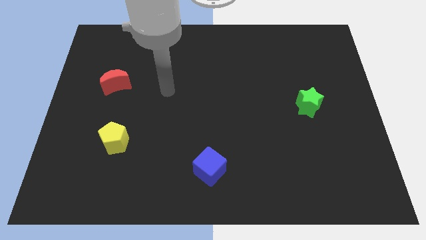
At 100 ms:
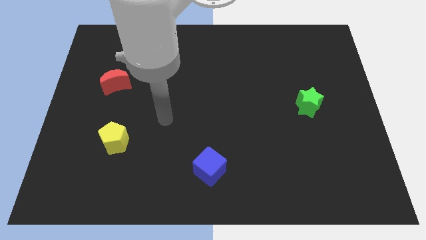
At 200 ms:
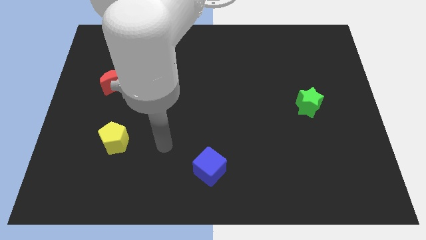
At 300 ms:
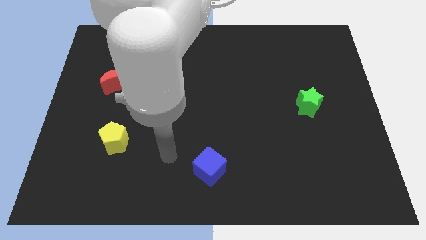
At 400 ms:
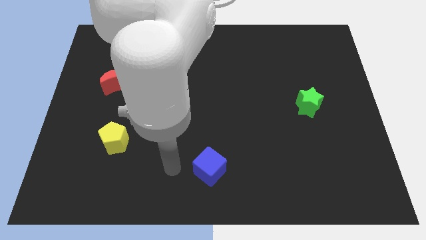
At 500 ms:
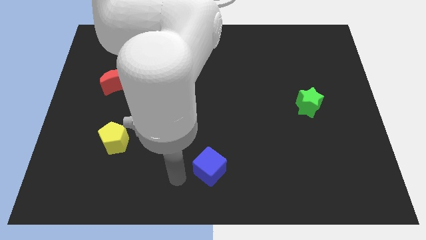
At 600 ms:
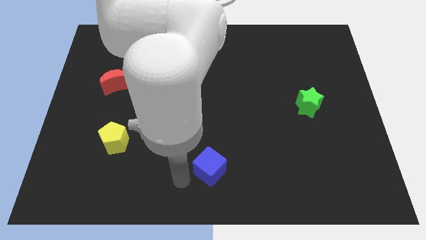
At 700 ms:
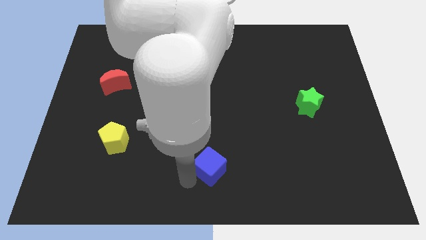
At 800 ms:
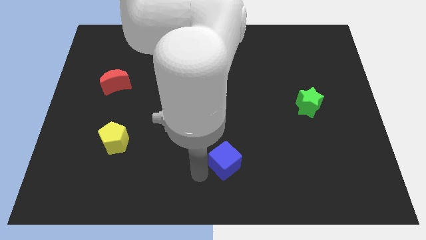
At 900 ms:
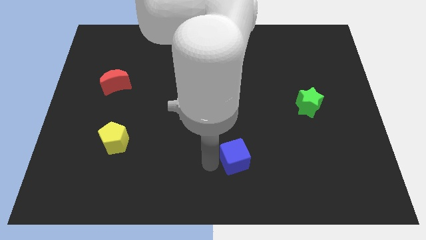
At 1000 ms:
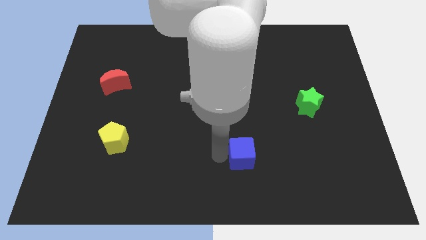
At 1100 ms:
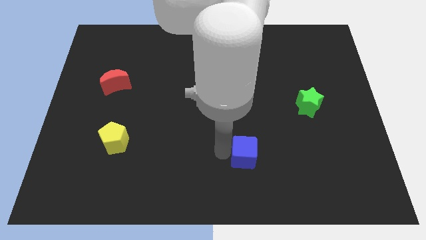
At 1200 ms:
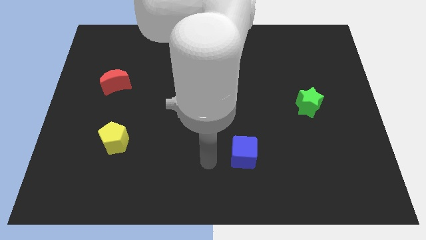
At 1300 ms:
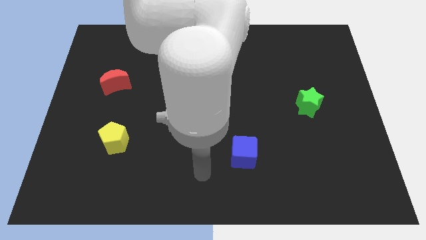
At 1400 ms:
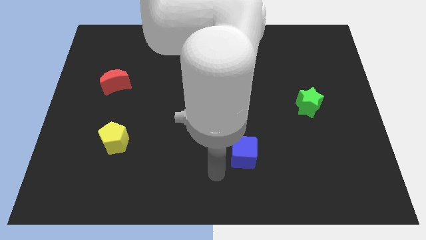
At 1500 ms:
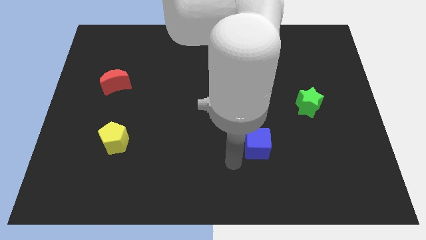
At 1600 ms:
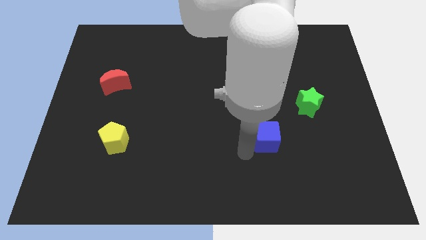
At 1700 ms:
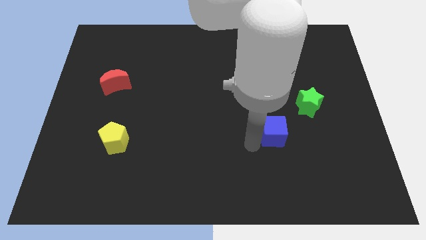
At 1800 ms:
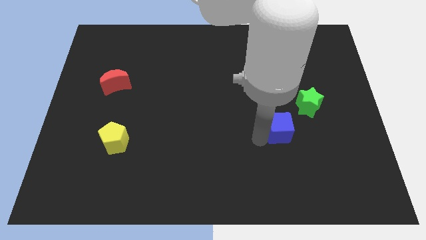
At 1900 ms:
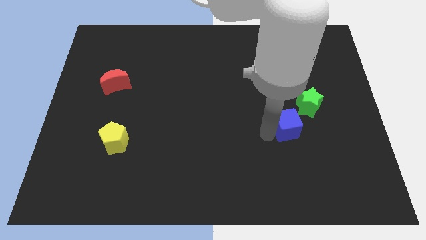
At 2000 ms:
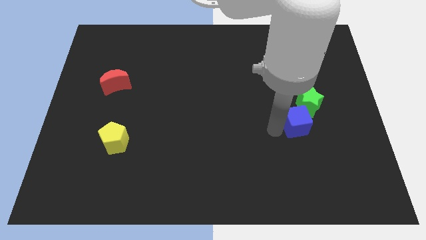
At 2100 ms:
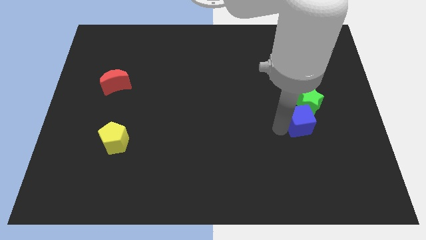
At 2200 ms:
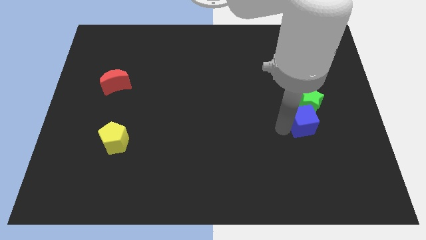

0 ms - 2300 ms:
slide the blue block to the green block

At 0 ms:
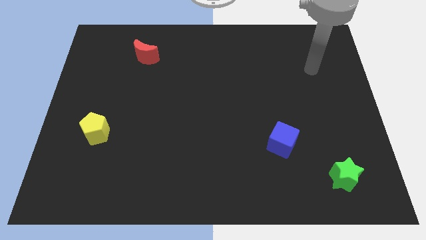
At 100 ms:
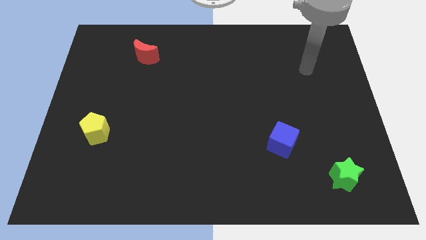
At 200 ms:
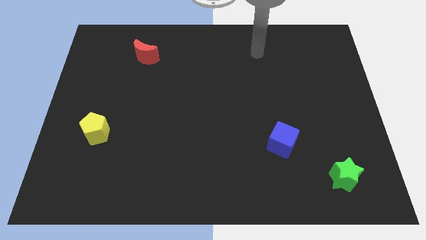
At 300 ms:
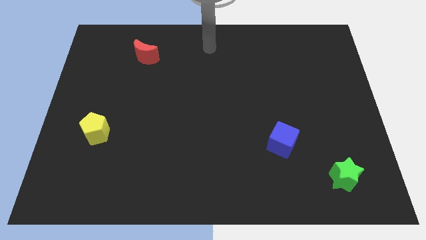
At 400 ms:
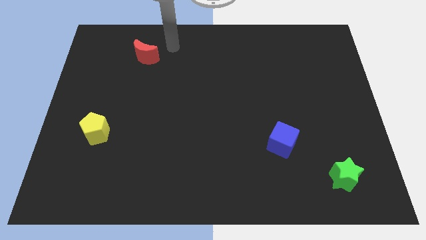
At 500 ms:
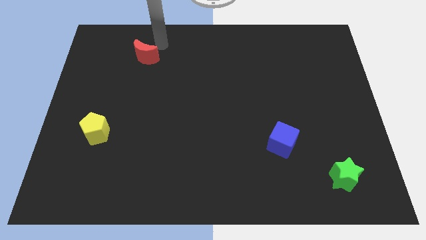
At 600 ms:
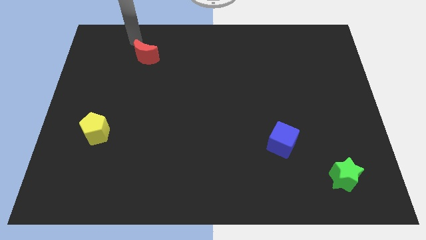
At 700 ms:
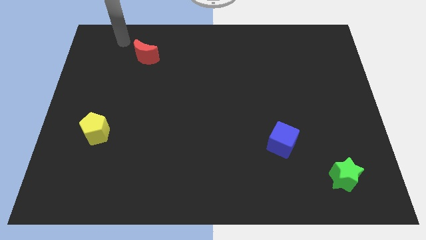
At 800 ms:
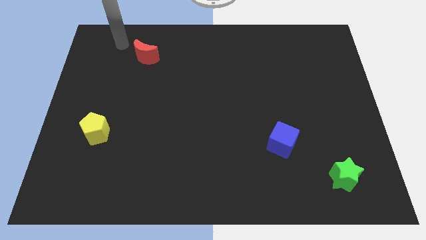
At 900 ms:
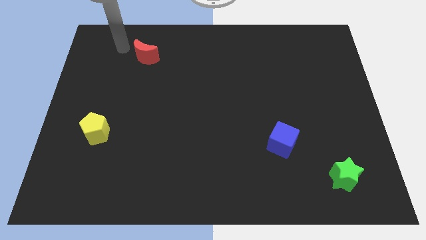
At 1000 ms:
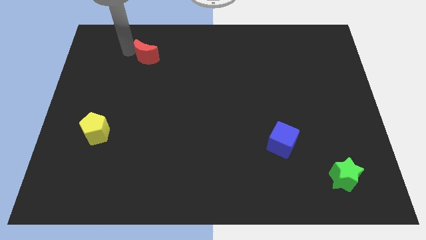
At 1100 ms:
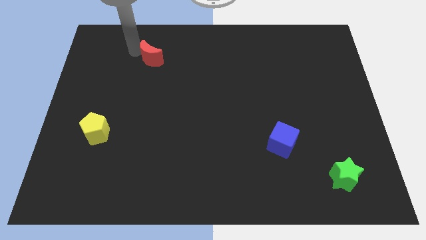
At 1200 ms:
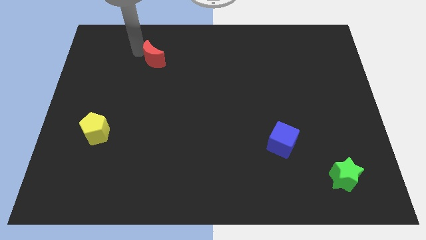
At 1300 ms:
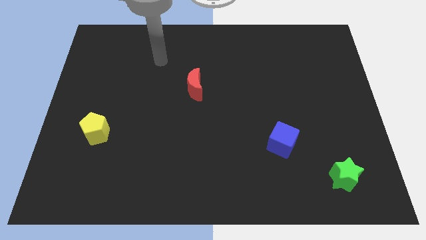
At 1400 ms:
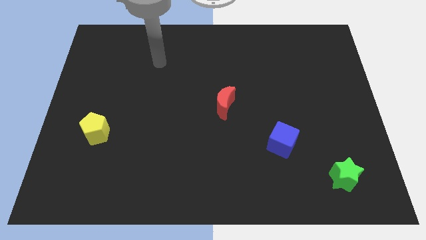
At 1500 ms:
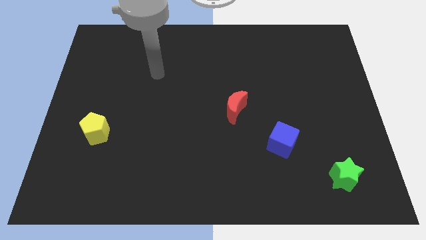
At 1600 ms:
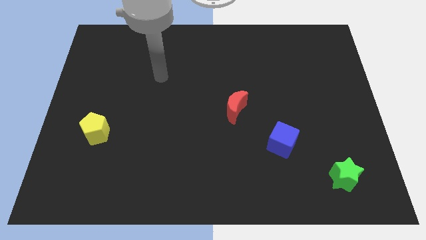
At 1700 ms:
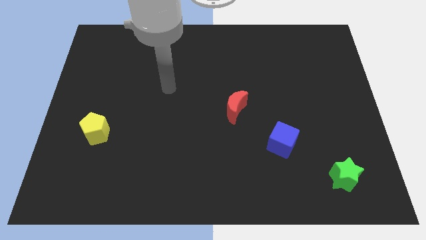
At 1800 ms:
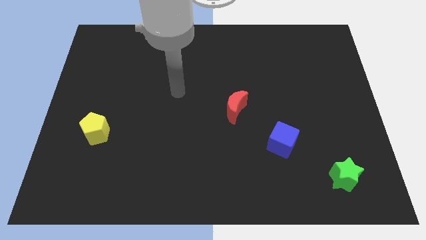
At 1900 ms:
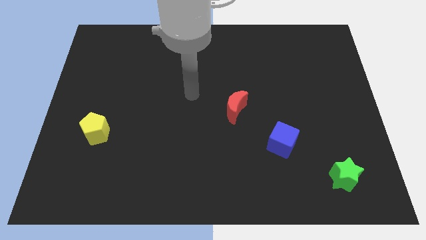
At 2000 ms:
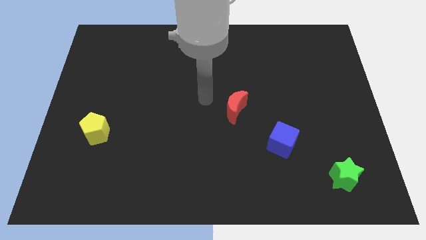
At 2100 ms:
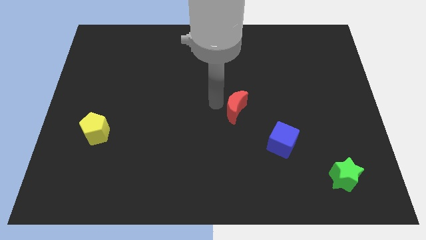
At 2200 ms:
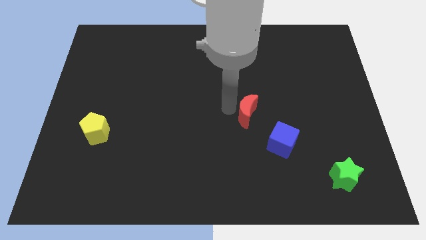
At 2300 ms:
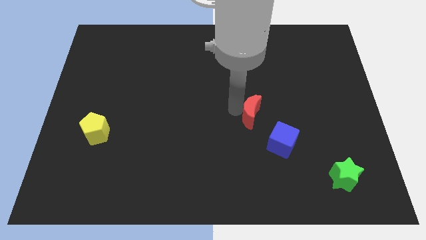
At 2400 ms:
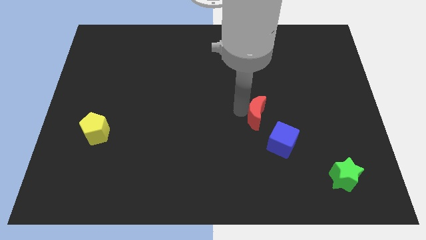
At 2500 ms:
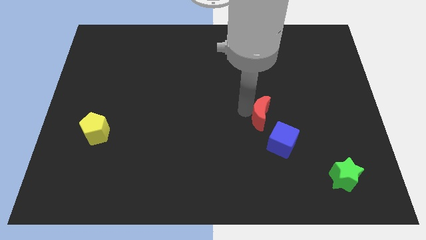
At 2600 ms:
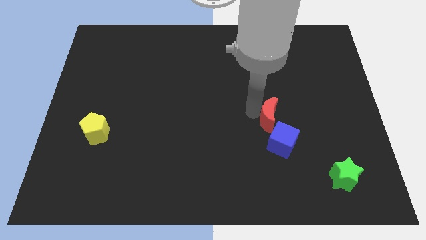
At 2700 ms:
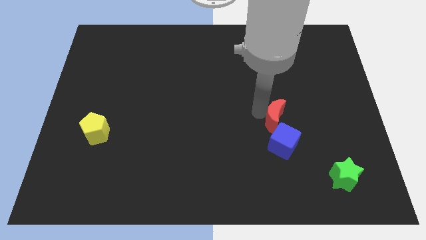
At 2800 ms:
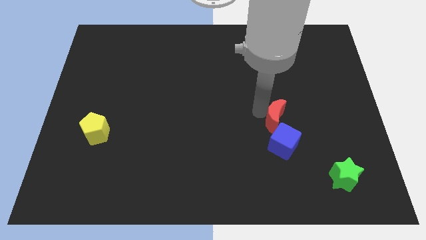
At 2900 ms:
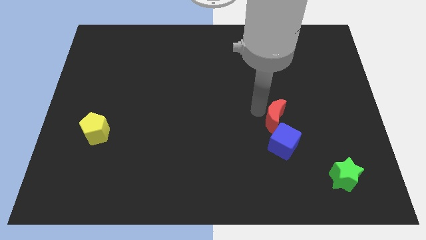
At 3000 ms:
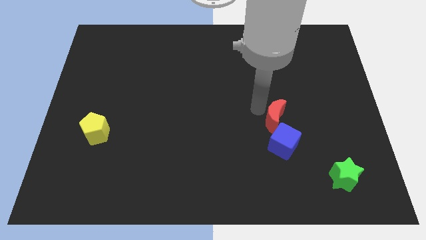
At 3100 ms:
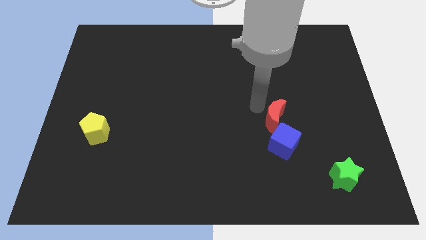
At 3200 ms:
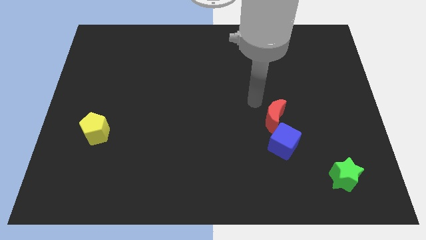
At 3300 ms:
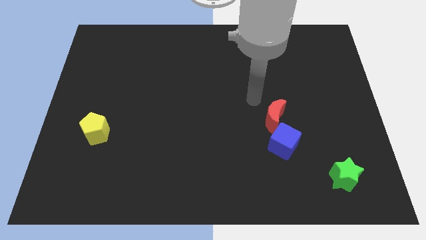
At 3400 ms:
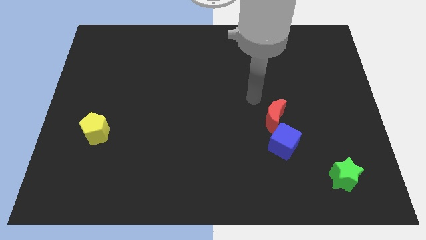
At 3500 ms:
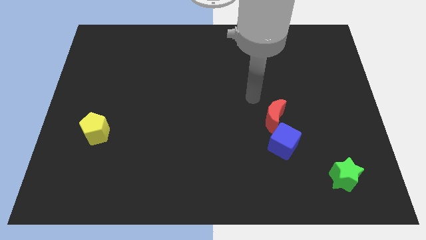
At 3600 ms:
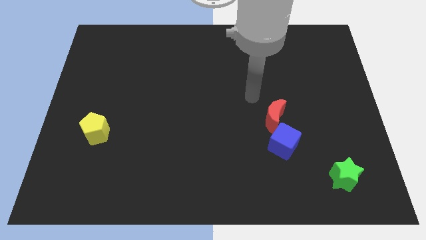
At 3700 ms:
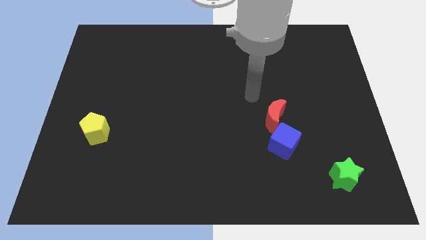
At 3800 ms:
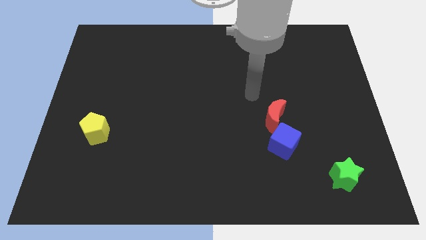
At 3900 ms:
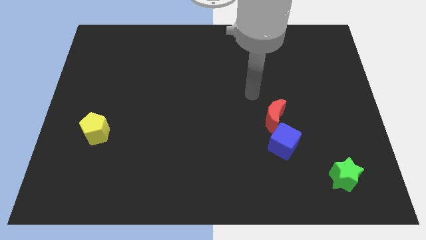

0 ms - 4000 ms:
move the red block to the green star

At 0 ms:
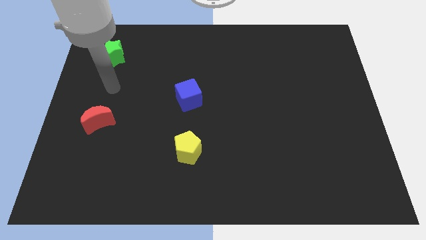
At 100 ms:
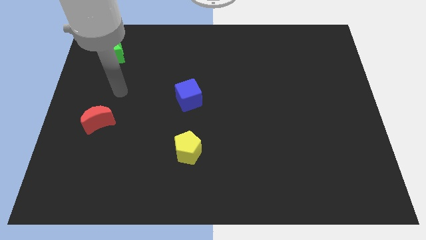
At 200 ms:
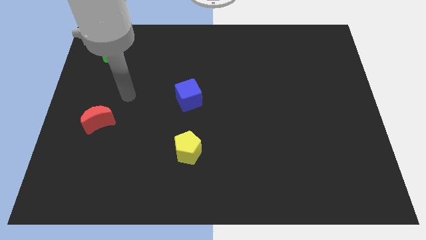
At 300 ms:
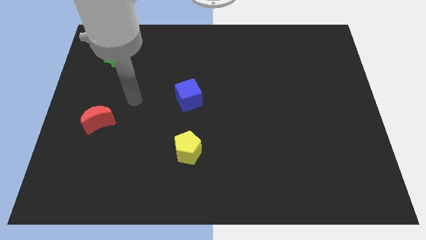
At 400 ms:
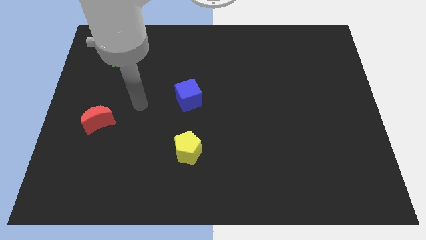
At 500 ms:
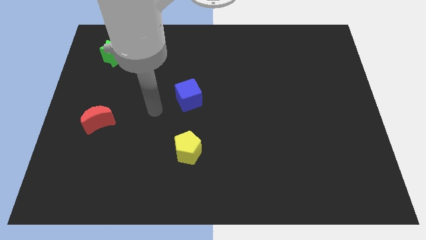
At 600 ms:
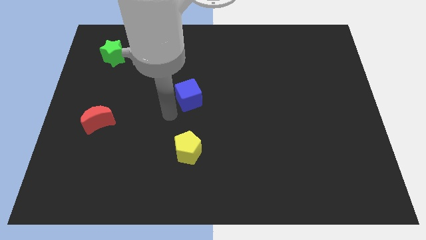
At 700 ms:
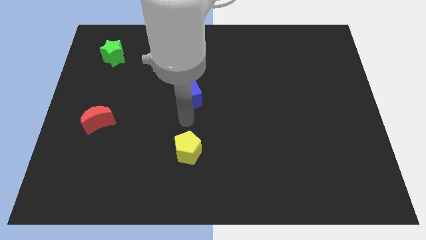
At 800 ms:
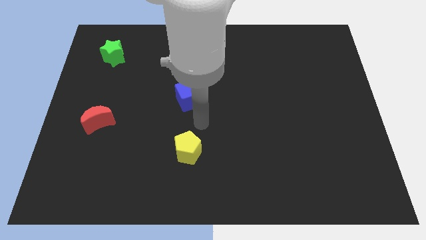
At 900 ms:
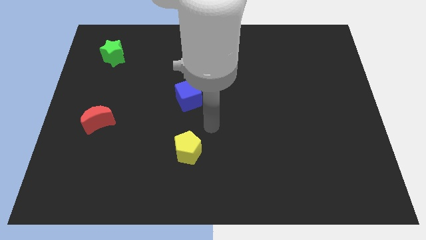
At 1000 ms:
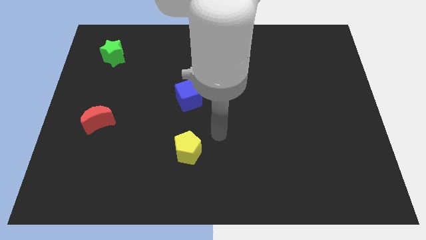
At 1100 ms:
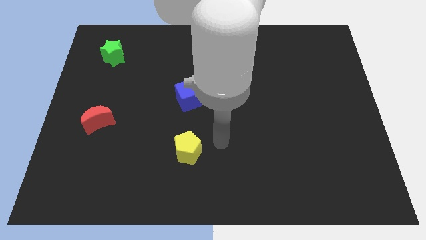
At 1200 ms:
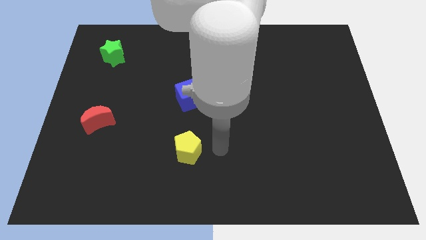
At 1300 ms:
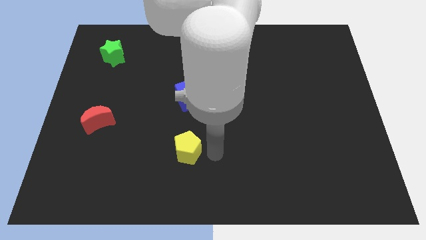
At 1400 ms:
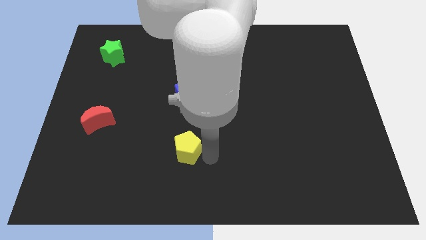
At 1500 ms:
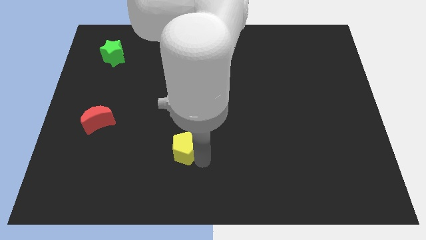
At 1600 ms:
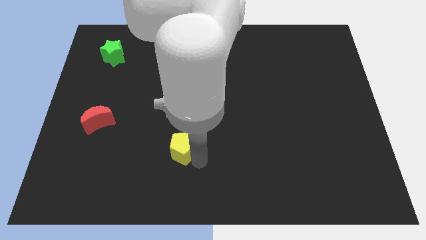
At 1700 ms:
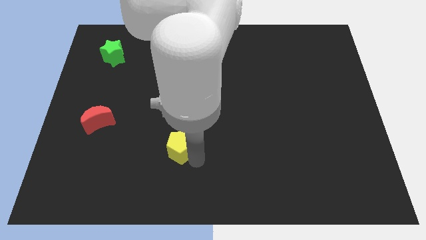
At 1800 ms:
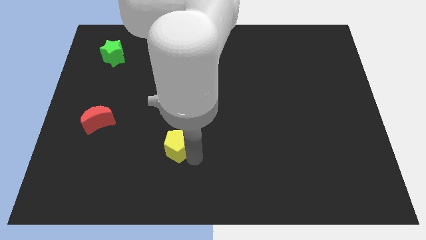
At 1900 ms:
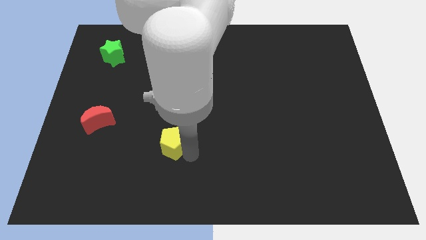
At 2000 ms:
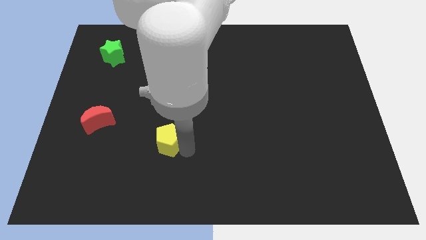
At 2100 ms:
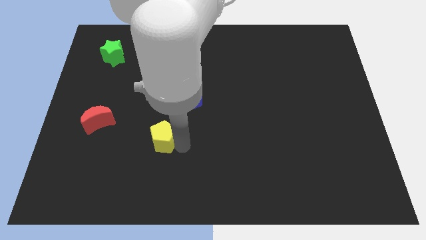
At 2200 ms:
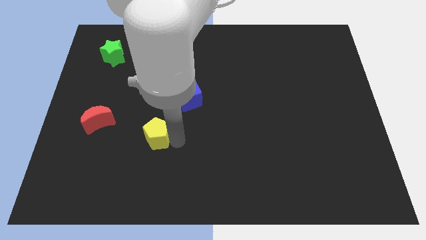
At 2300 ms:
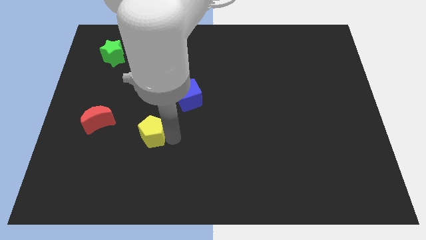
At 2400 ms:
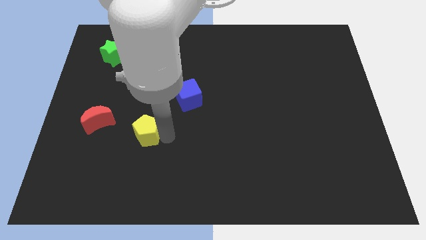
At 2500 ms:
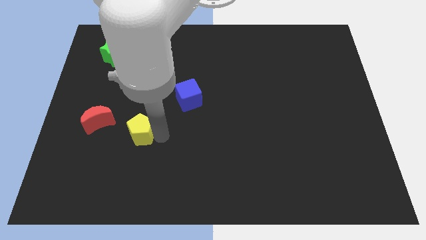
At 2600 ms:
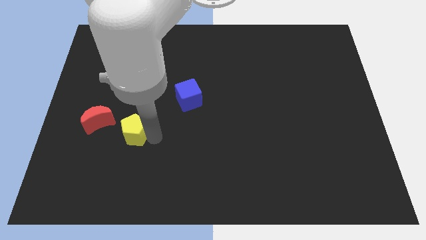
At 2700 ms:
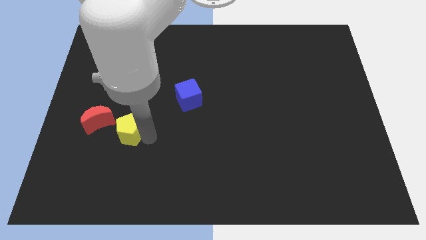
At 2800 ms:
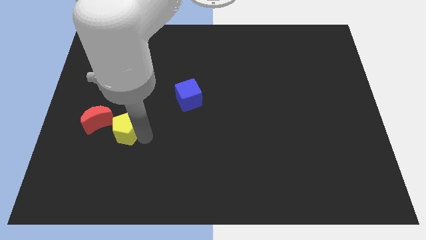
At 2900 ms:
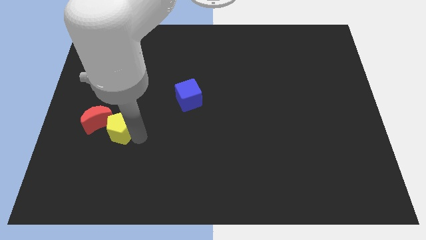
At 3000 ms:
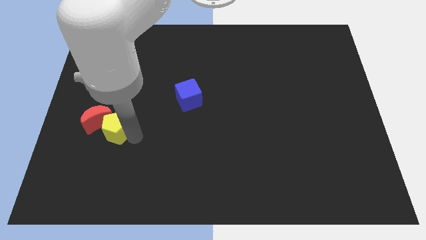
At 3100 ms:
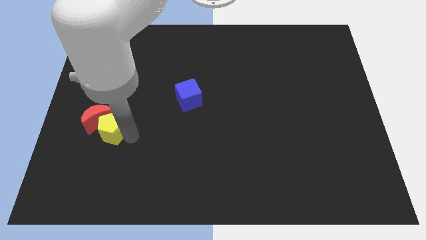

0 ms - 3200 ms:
put the pentagon close to the red block
